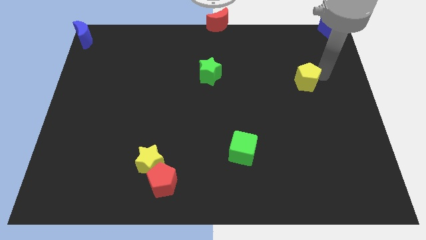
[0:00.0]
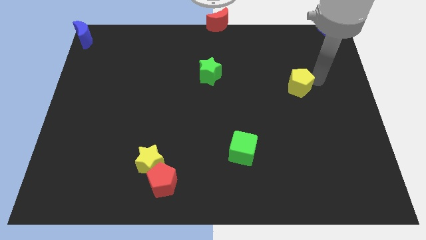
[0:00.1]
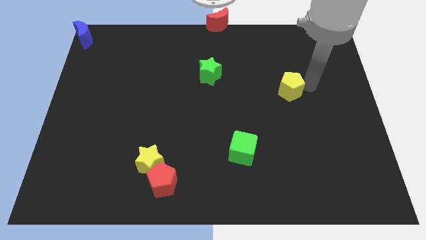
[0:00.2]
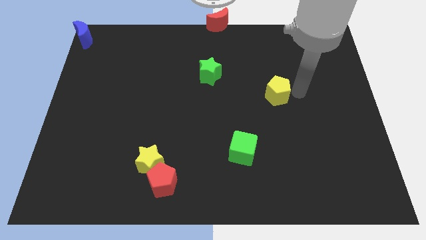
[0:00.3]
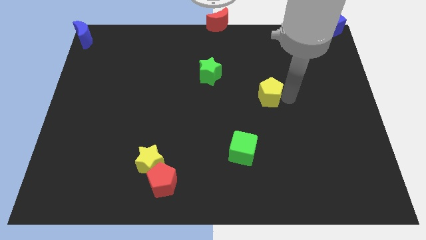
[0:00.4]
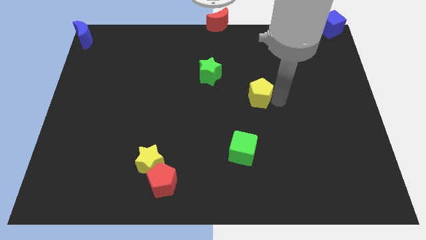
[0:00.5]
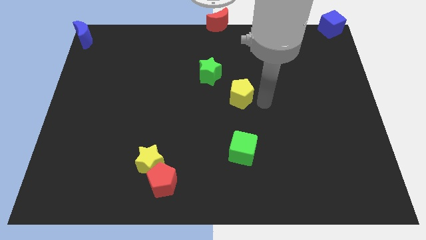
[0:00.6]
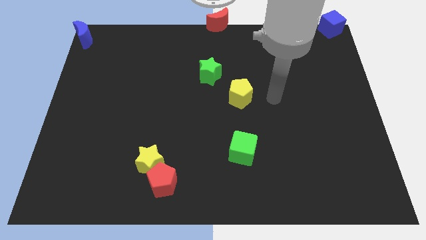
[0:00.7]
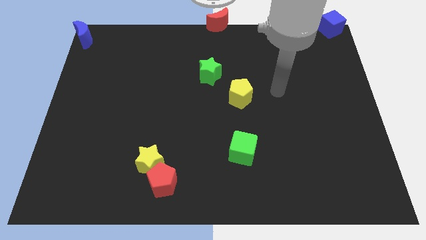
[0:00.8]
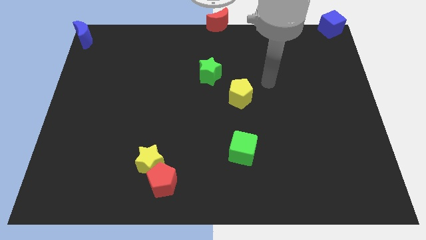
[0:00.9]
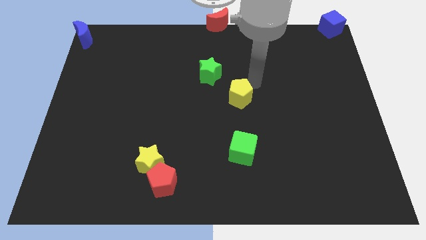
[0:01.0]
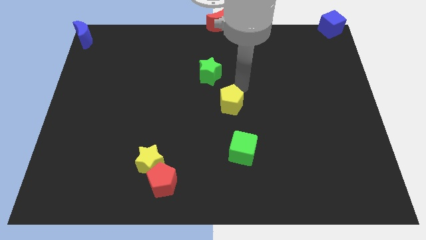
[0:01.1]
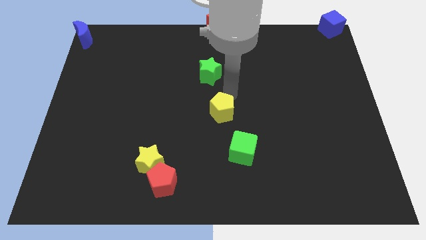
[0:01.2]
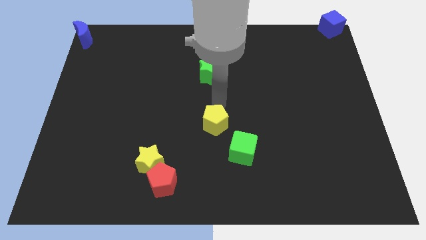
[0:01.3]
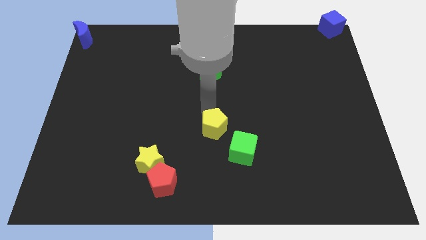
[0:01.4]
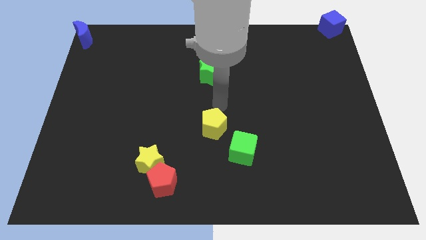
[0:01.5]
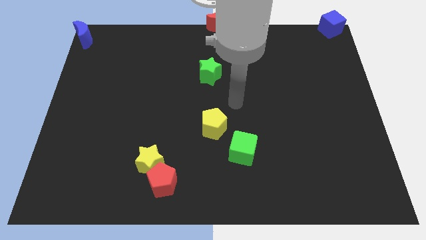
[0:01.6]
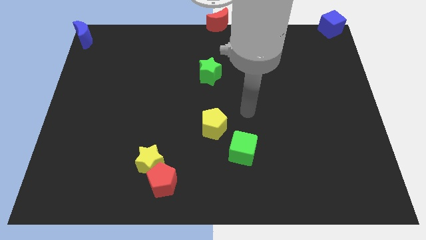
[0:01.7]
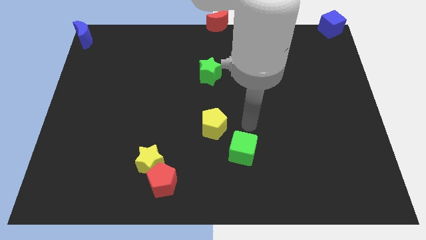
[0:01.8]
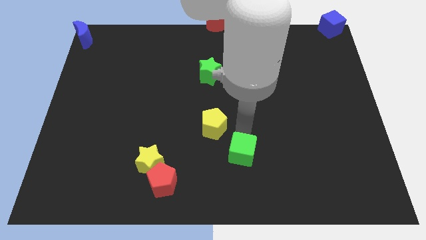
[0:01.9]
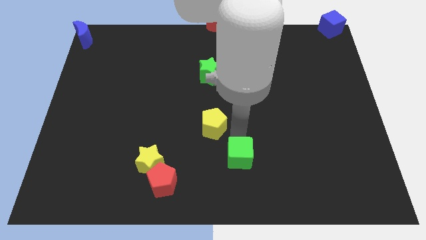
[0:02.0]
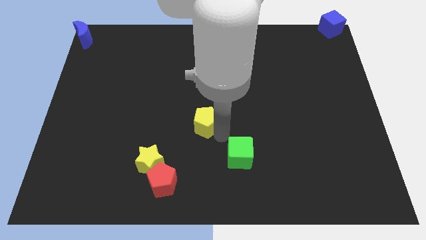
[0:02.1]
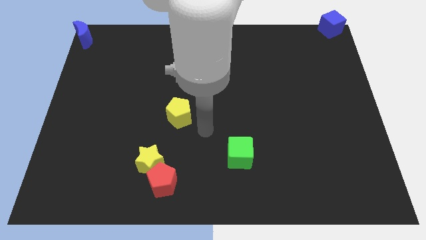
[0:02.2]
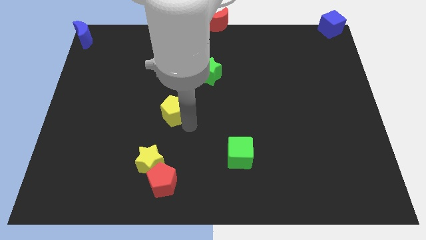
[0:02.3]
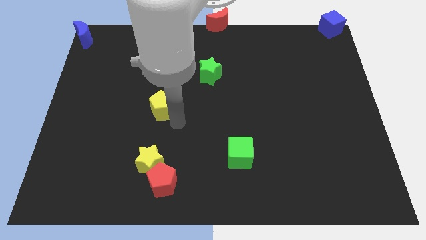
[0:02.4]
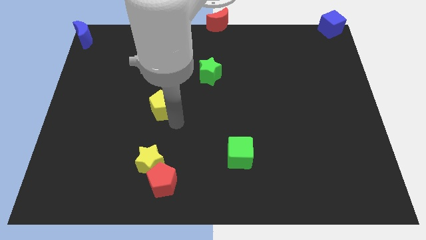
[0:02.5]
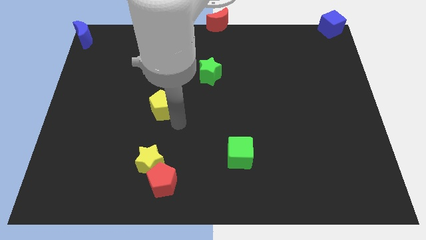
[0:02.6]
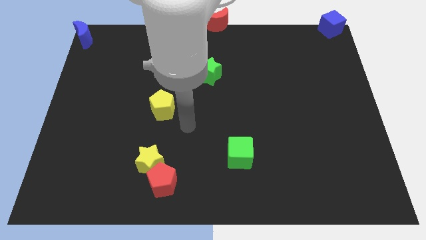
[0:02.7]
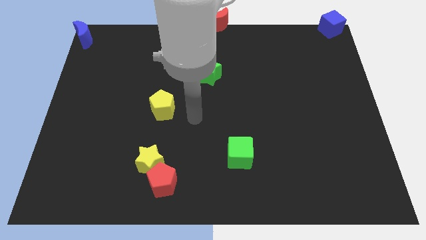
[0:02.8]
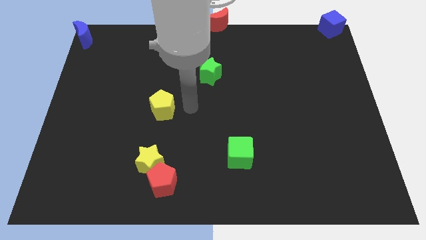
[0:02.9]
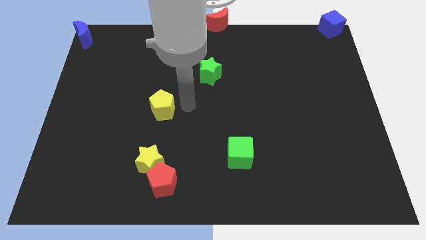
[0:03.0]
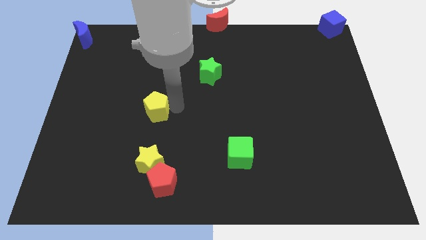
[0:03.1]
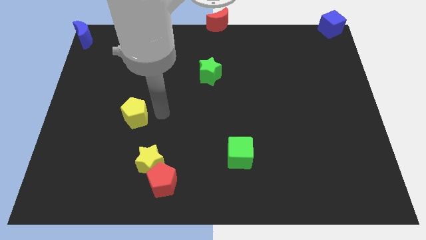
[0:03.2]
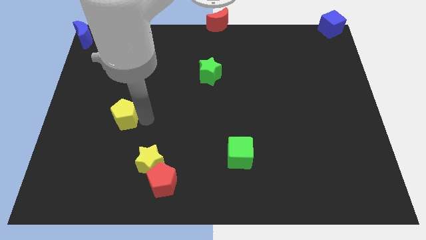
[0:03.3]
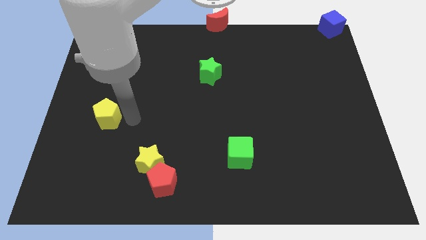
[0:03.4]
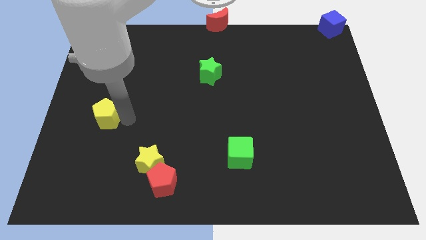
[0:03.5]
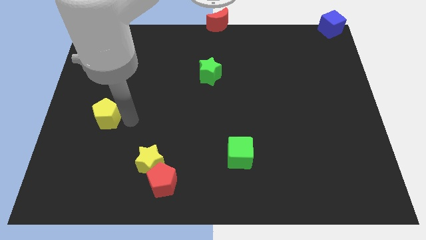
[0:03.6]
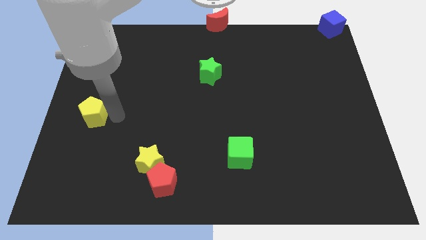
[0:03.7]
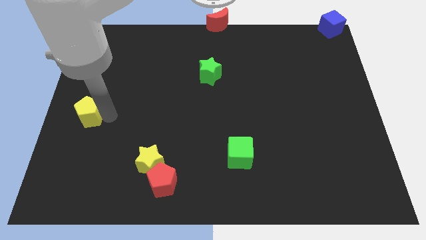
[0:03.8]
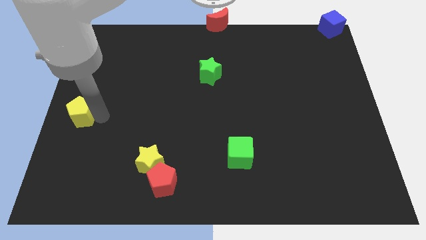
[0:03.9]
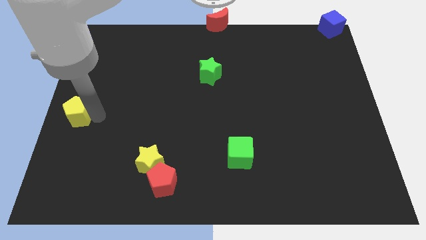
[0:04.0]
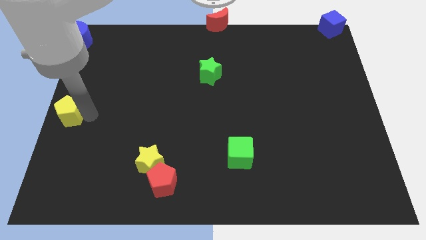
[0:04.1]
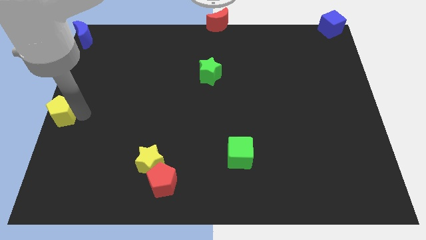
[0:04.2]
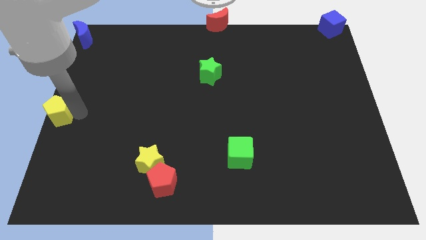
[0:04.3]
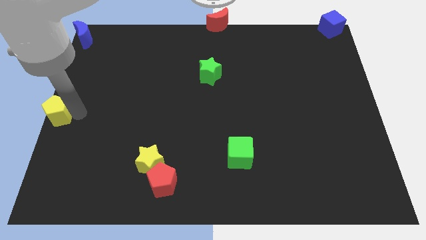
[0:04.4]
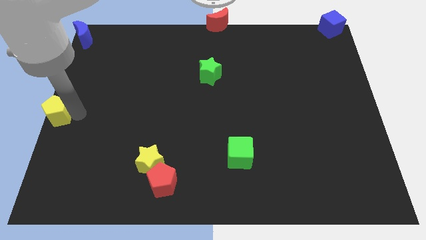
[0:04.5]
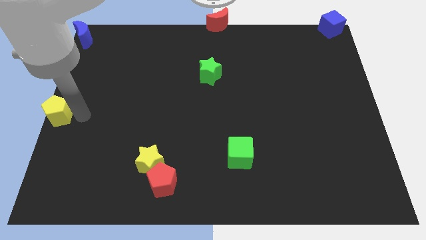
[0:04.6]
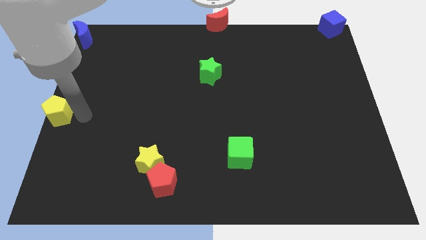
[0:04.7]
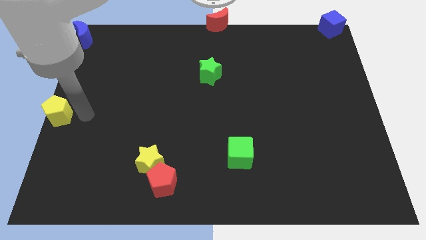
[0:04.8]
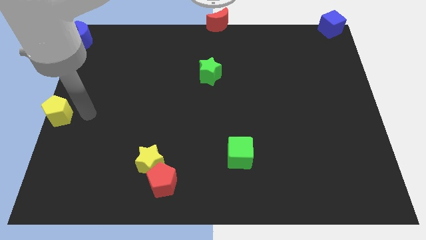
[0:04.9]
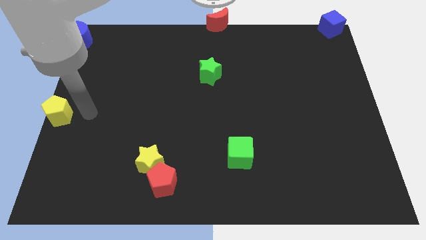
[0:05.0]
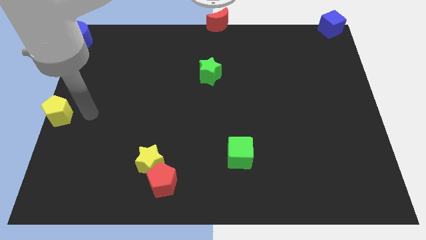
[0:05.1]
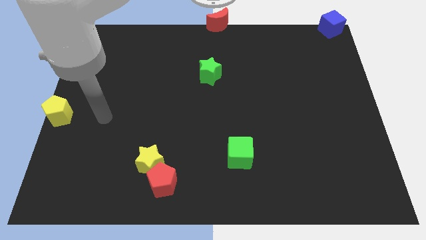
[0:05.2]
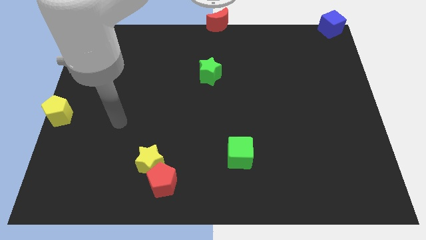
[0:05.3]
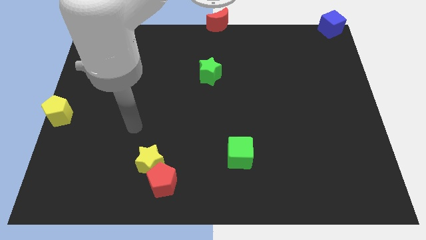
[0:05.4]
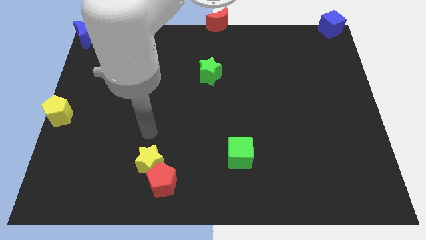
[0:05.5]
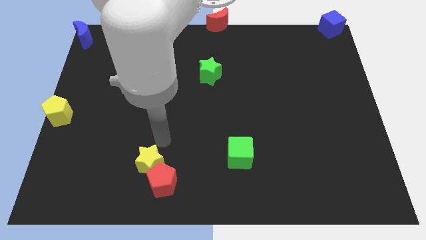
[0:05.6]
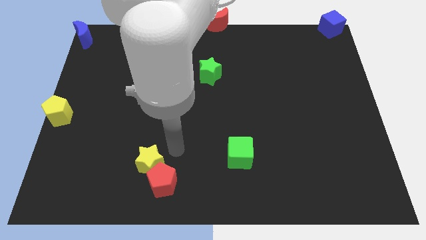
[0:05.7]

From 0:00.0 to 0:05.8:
move the yellow pentagon to the left center of the board

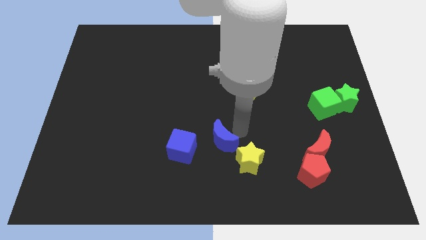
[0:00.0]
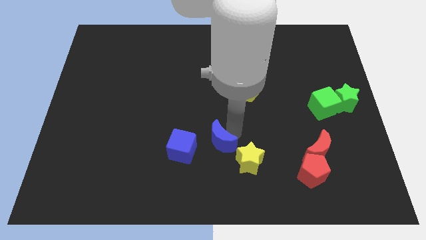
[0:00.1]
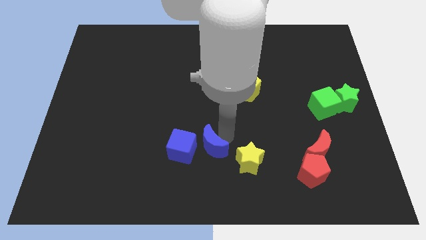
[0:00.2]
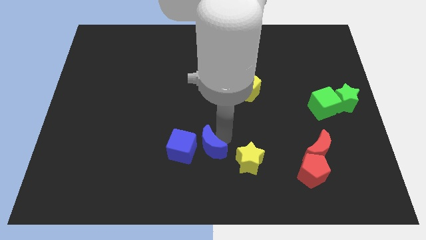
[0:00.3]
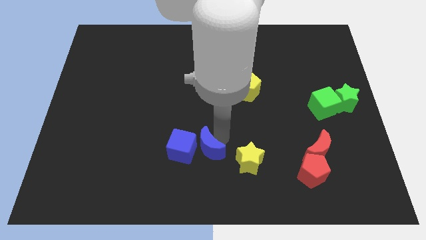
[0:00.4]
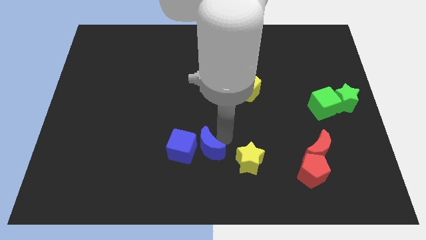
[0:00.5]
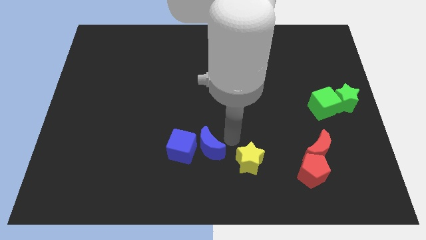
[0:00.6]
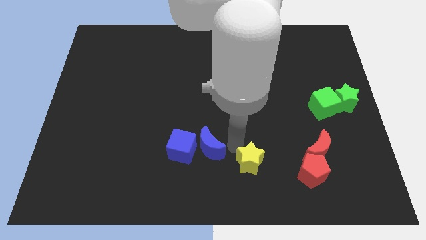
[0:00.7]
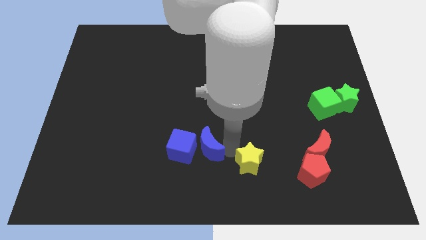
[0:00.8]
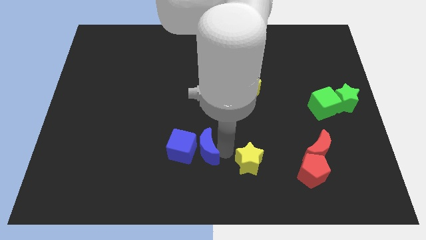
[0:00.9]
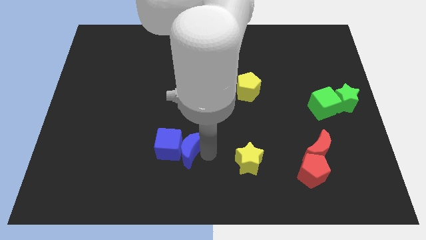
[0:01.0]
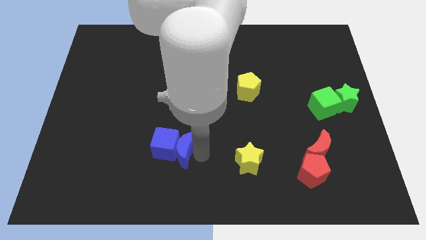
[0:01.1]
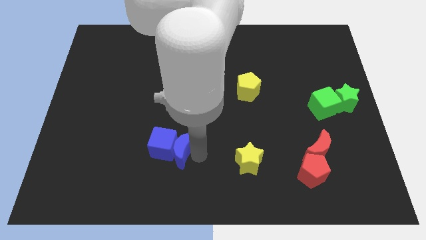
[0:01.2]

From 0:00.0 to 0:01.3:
put blue blocks together

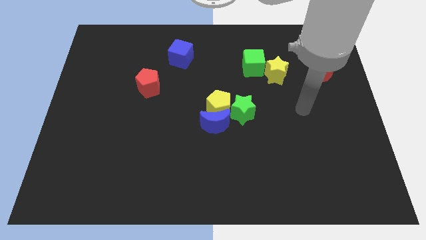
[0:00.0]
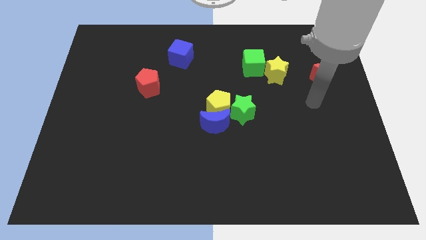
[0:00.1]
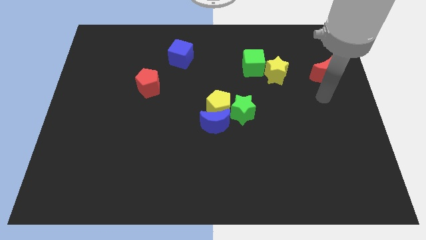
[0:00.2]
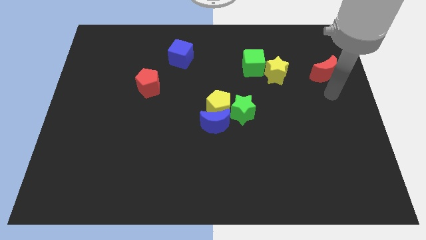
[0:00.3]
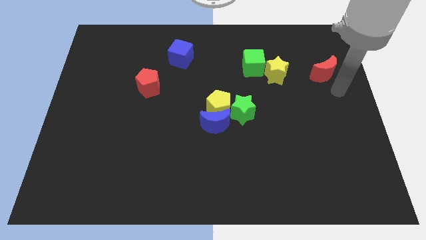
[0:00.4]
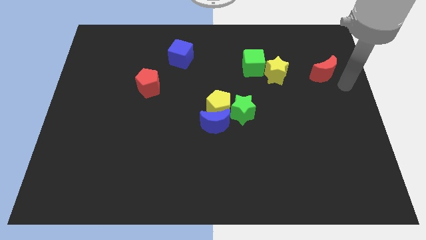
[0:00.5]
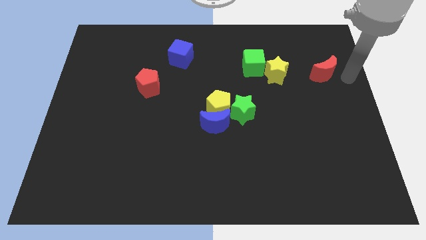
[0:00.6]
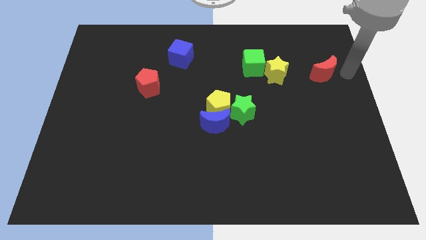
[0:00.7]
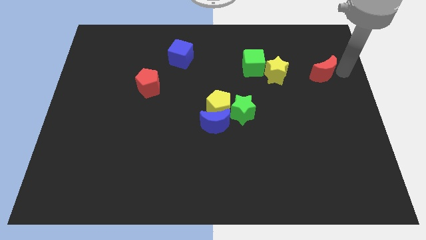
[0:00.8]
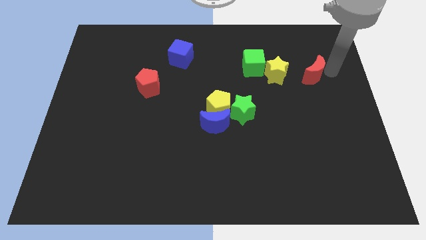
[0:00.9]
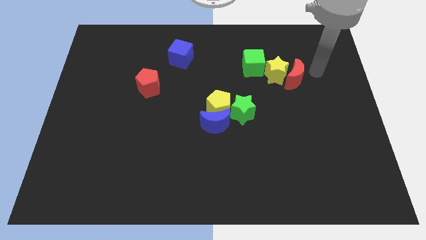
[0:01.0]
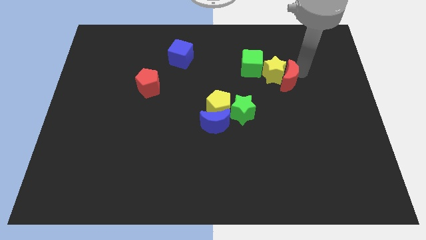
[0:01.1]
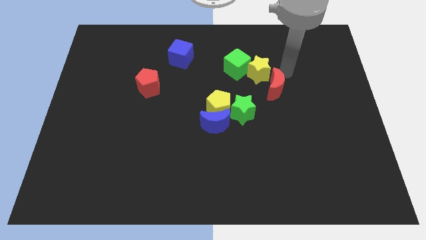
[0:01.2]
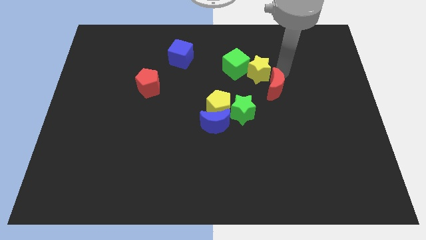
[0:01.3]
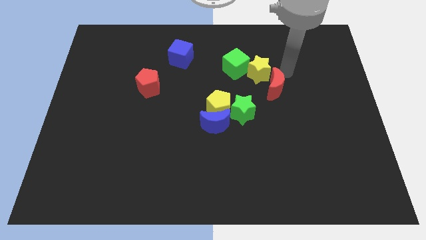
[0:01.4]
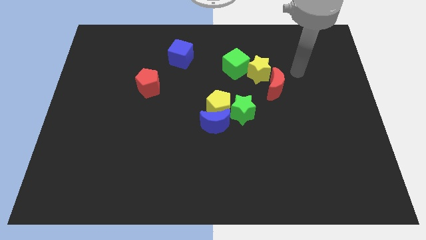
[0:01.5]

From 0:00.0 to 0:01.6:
push the red moon to the bottom right side of the yellow star

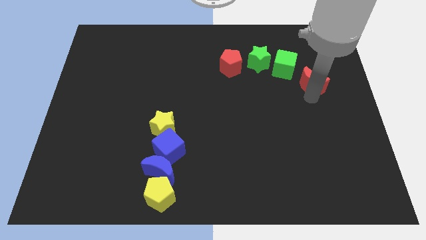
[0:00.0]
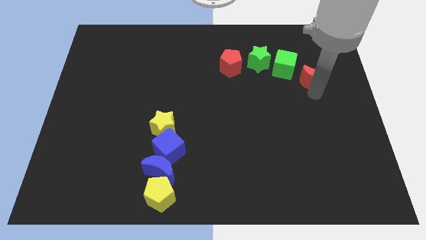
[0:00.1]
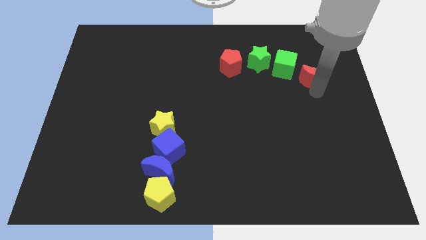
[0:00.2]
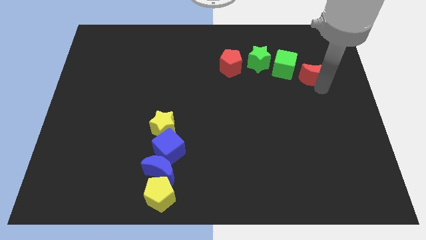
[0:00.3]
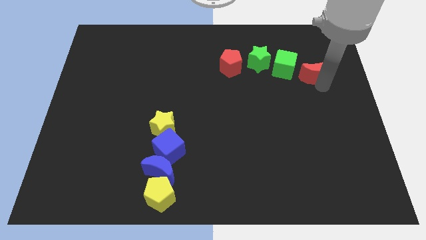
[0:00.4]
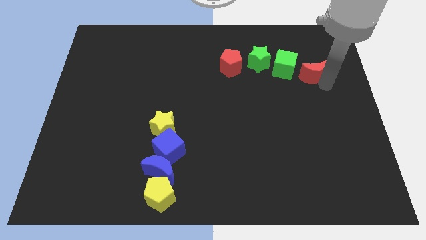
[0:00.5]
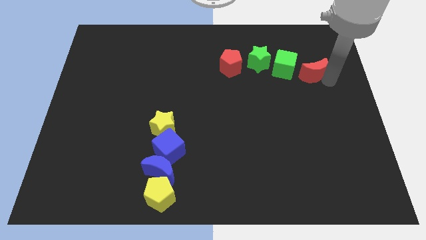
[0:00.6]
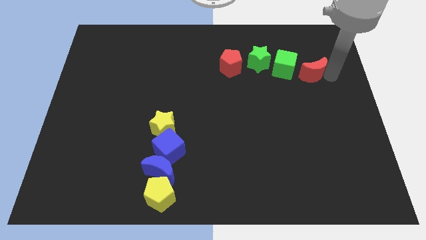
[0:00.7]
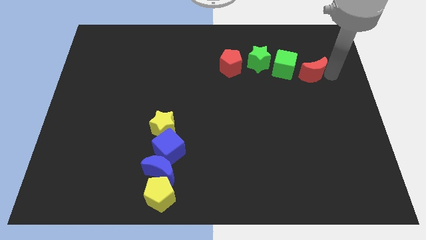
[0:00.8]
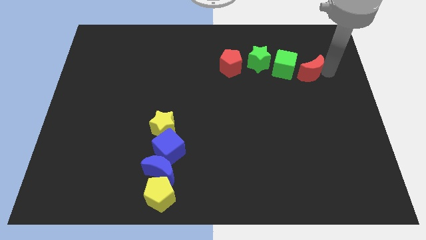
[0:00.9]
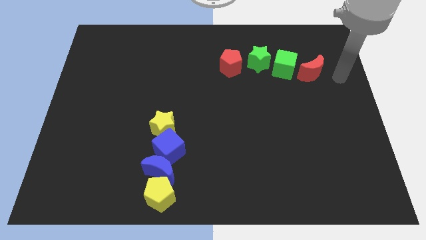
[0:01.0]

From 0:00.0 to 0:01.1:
slightly push the red moon to the right side of the green cube
